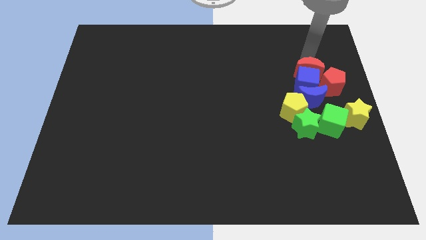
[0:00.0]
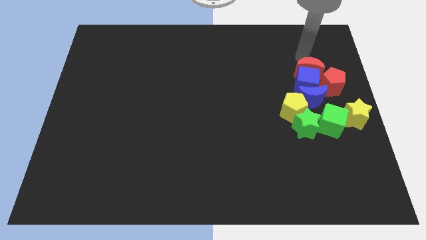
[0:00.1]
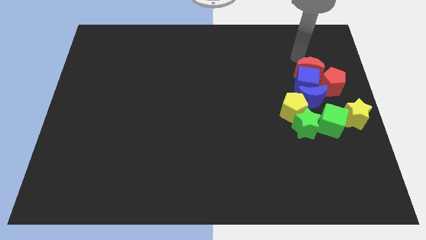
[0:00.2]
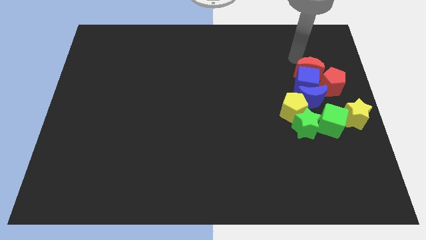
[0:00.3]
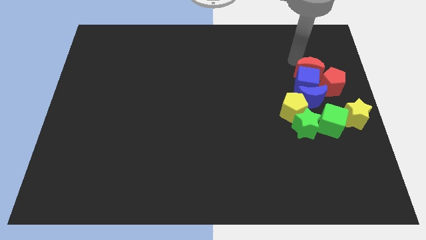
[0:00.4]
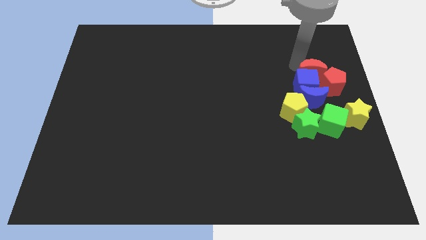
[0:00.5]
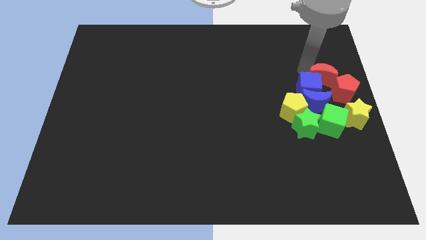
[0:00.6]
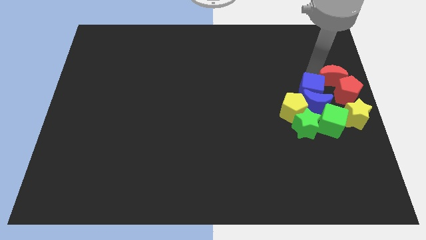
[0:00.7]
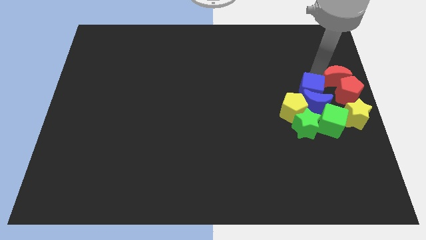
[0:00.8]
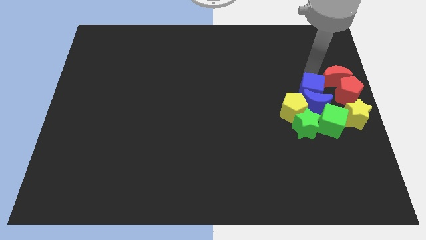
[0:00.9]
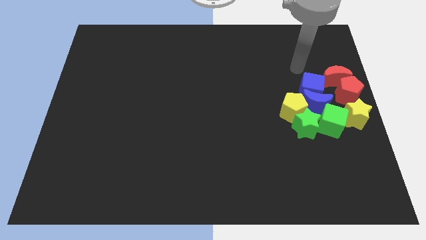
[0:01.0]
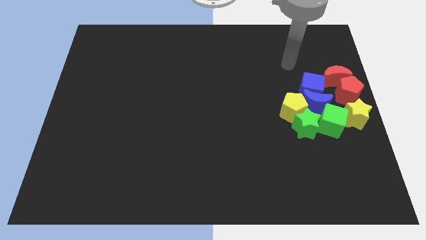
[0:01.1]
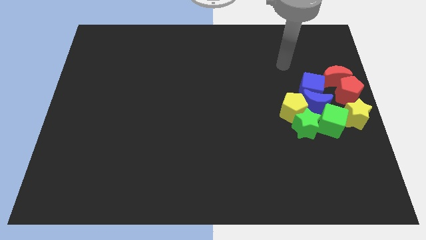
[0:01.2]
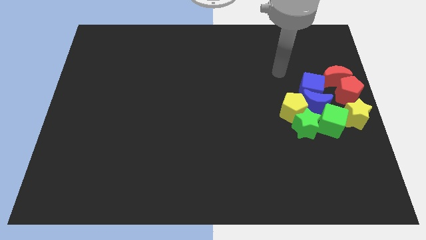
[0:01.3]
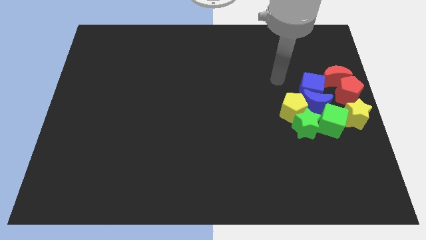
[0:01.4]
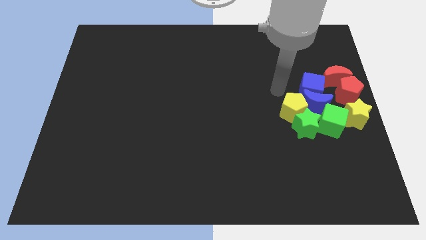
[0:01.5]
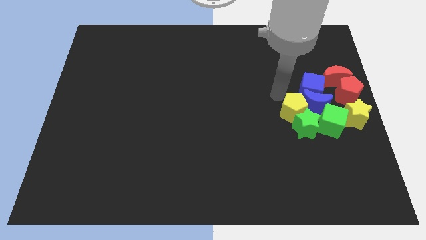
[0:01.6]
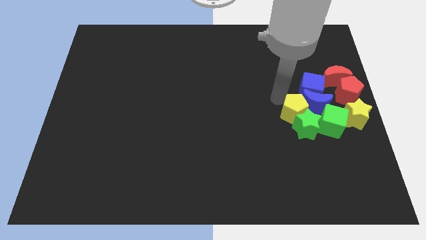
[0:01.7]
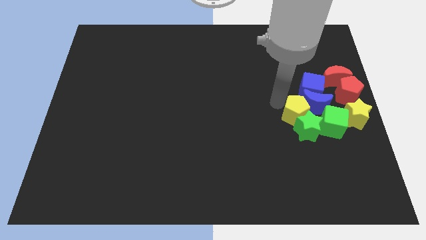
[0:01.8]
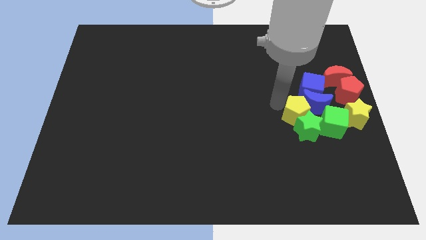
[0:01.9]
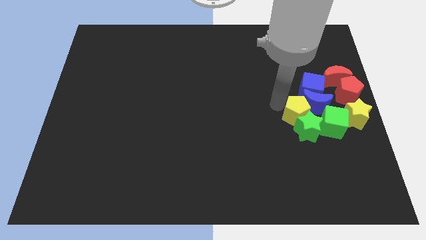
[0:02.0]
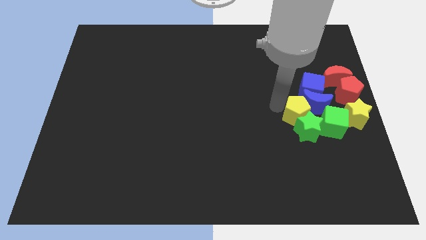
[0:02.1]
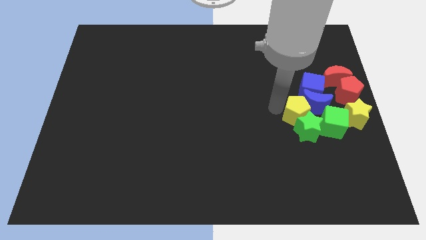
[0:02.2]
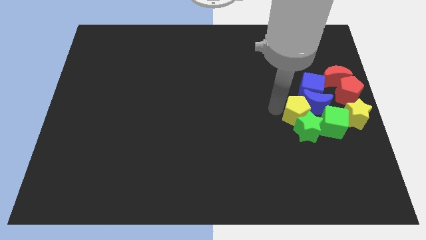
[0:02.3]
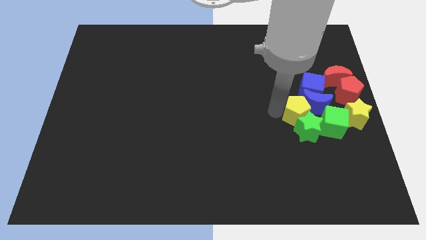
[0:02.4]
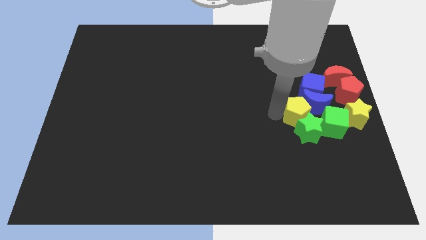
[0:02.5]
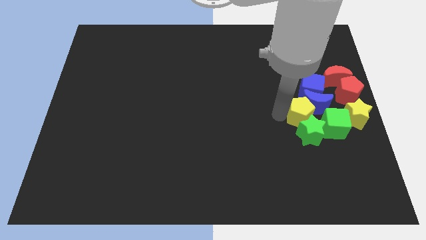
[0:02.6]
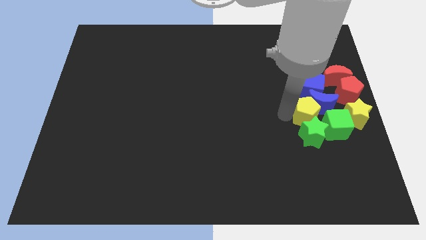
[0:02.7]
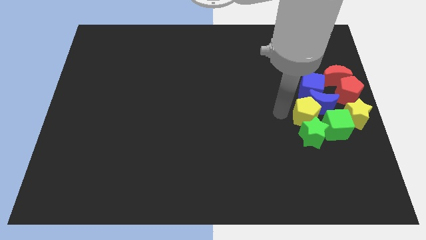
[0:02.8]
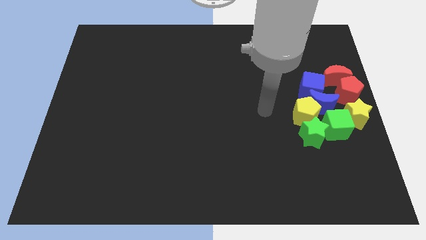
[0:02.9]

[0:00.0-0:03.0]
adjust the group of blocks at the right center of the board

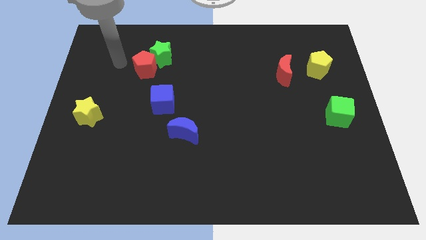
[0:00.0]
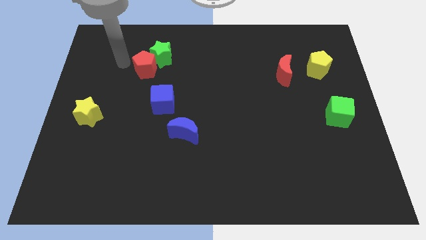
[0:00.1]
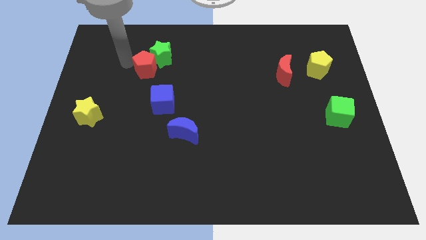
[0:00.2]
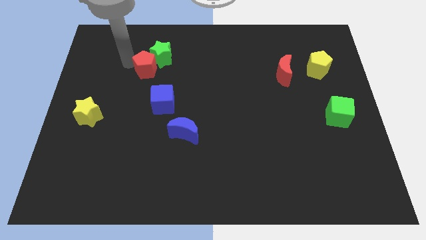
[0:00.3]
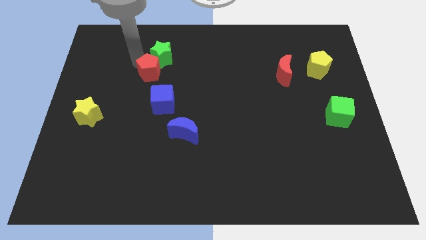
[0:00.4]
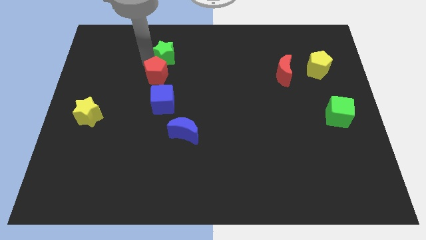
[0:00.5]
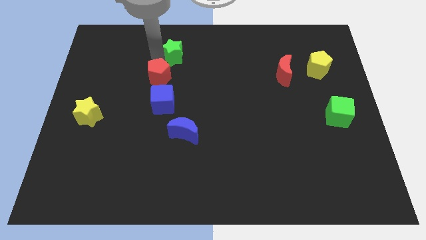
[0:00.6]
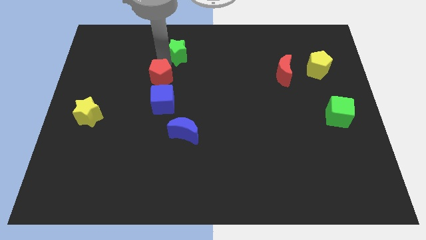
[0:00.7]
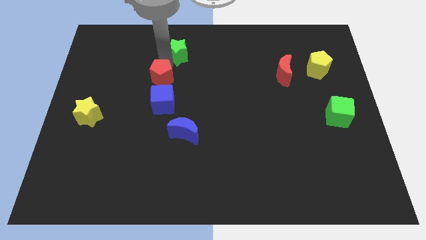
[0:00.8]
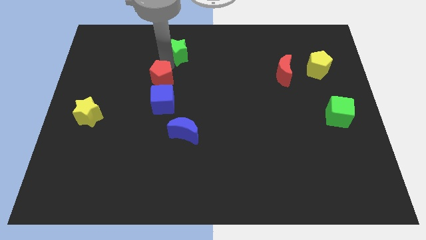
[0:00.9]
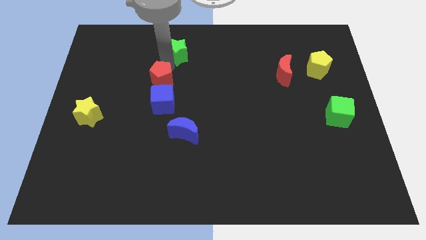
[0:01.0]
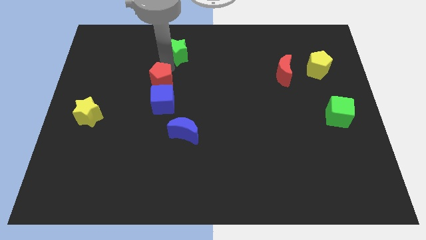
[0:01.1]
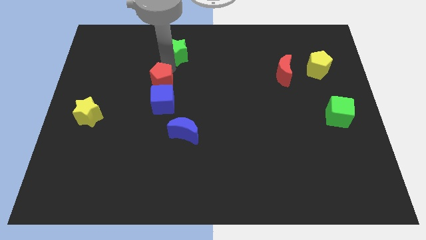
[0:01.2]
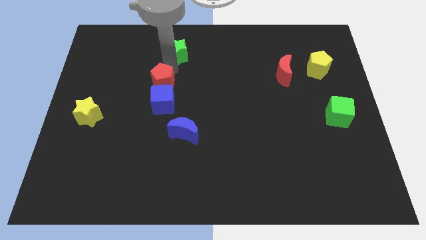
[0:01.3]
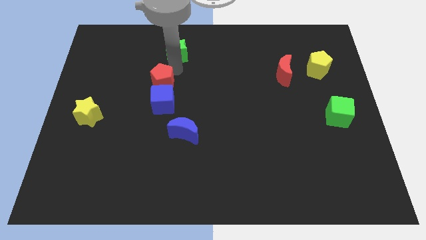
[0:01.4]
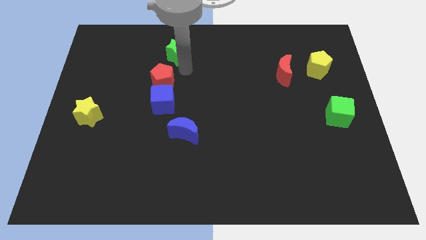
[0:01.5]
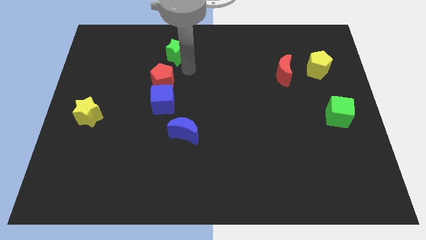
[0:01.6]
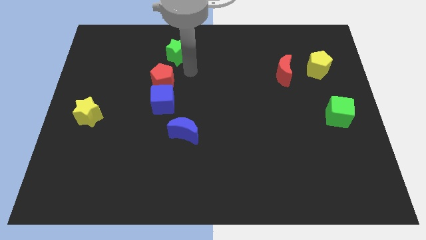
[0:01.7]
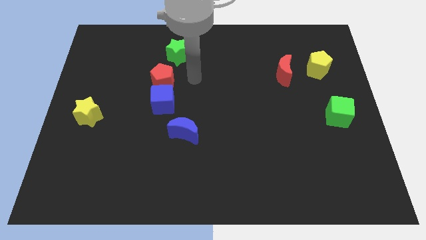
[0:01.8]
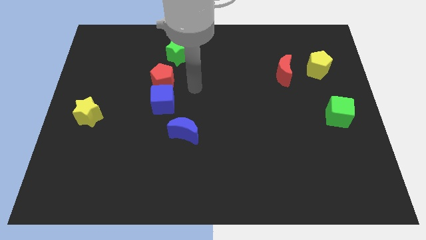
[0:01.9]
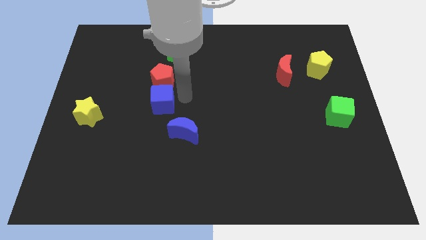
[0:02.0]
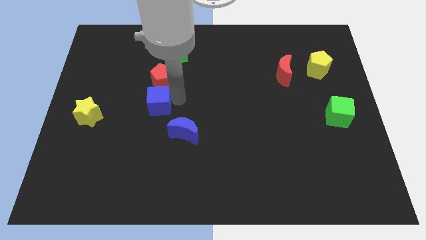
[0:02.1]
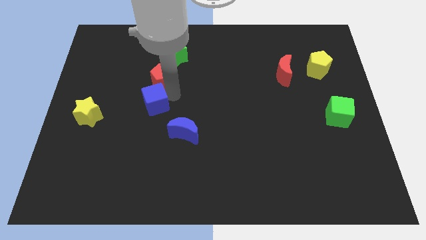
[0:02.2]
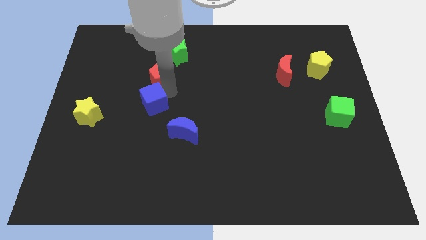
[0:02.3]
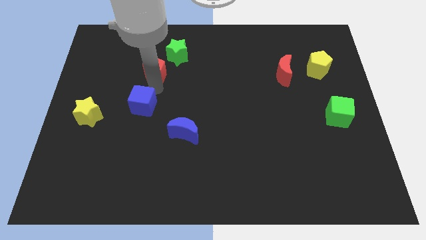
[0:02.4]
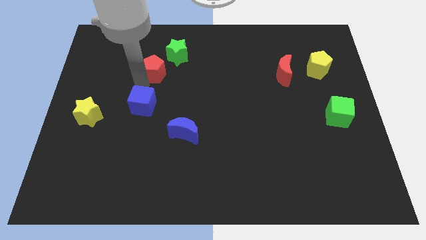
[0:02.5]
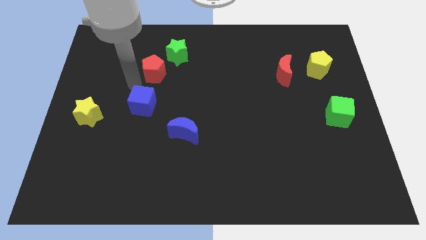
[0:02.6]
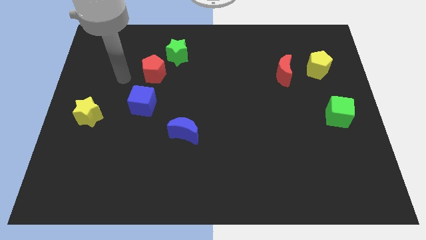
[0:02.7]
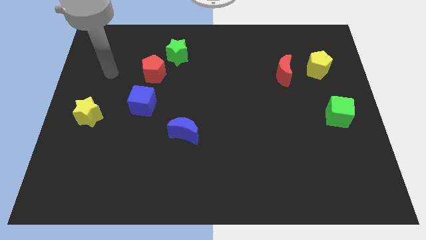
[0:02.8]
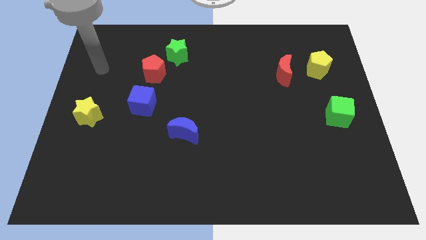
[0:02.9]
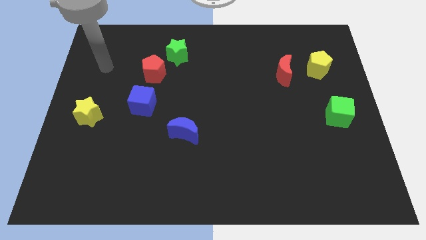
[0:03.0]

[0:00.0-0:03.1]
push the red pentagon to the top of the blue cube

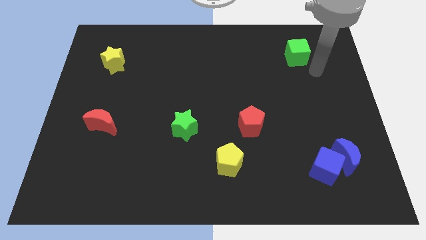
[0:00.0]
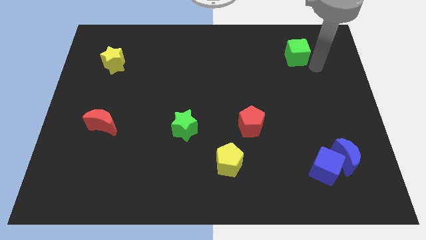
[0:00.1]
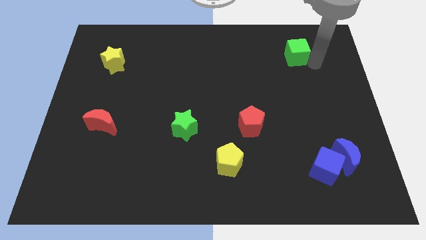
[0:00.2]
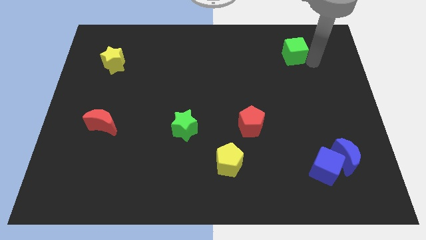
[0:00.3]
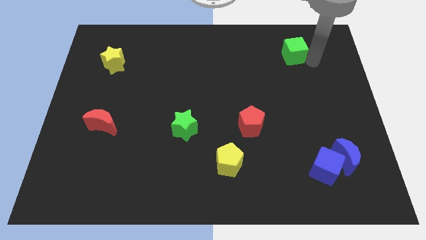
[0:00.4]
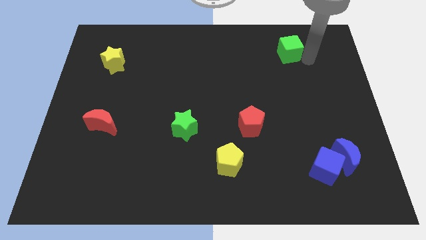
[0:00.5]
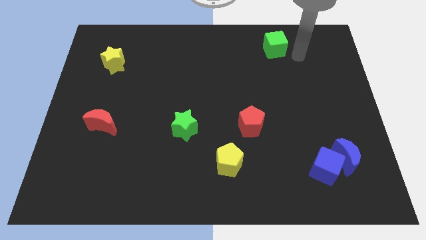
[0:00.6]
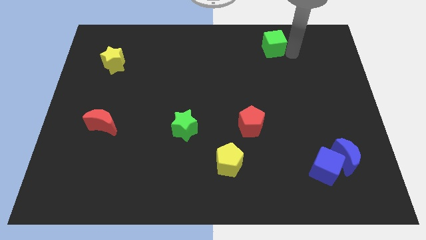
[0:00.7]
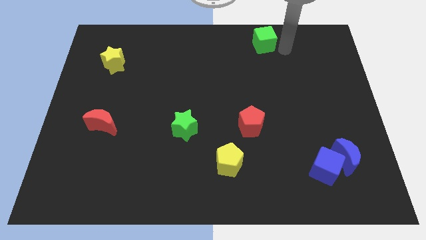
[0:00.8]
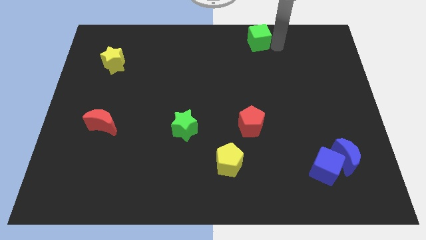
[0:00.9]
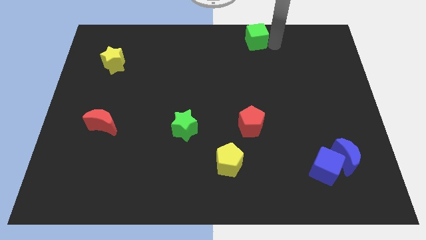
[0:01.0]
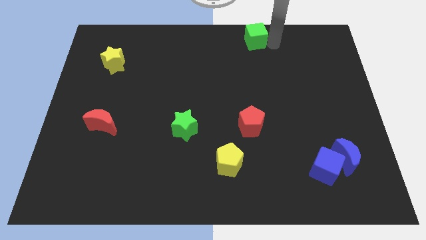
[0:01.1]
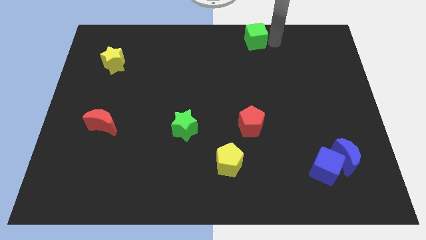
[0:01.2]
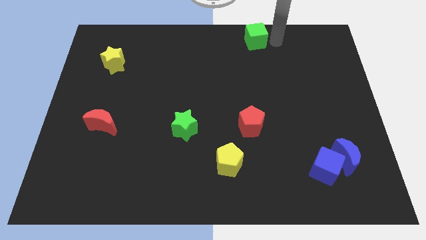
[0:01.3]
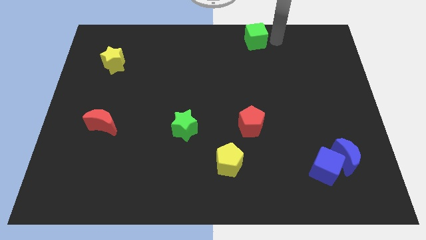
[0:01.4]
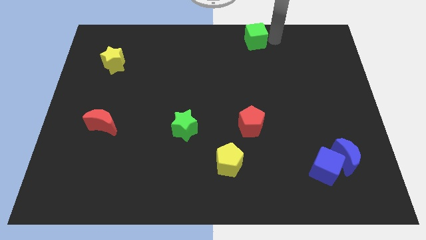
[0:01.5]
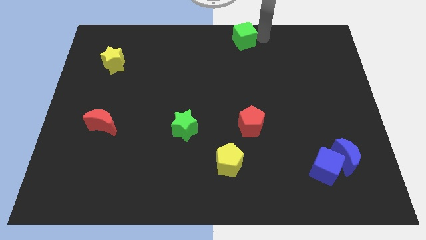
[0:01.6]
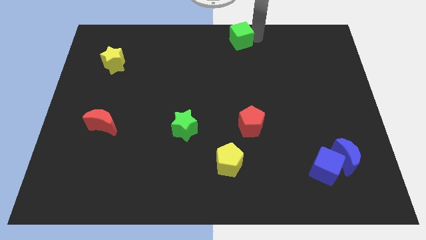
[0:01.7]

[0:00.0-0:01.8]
push green cube above red pentagon

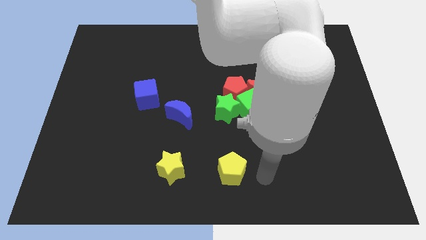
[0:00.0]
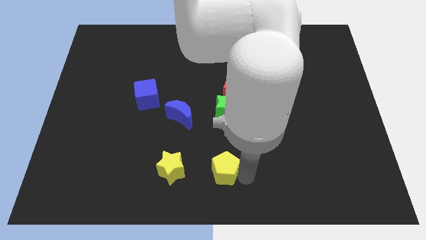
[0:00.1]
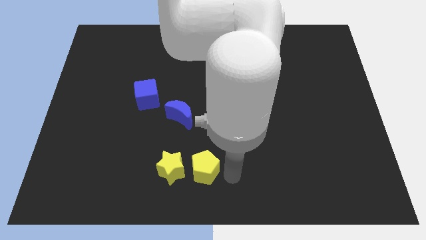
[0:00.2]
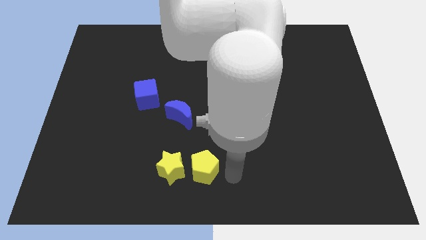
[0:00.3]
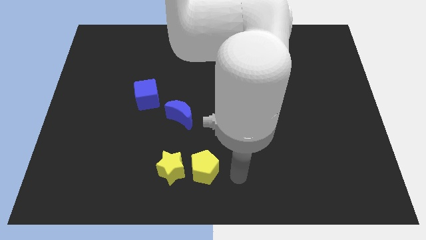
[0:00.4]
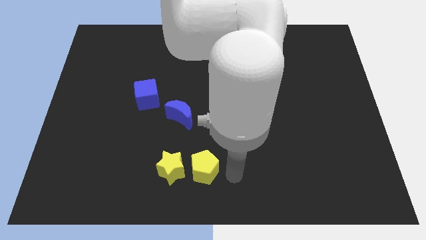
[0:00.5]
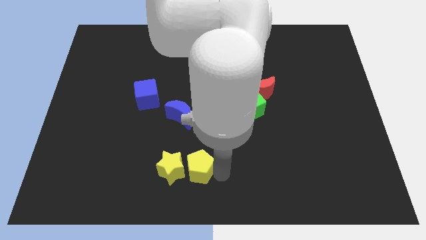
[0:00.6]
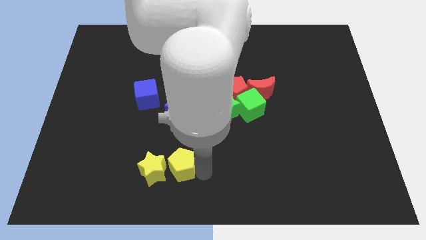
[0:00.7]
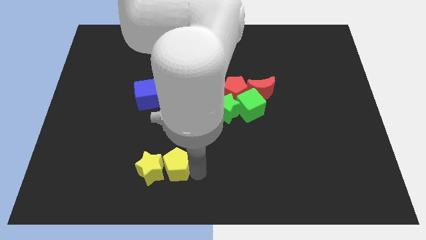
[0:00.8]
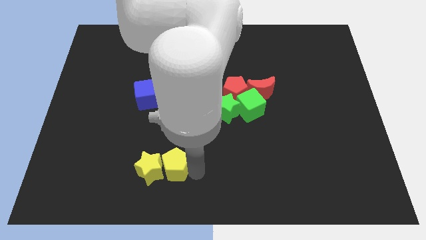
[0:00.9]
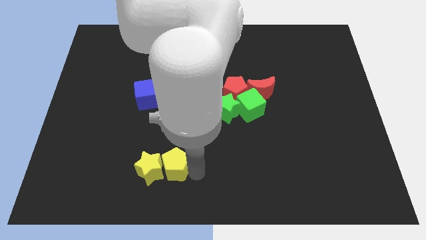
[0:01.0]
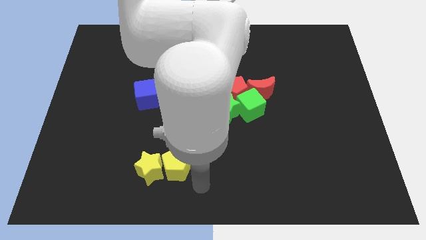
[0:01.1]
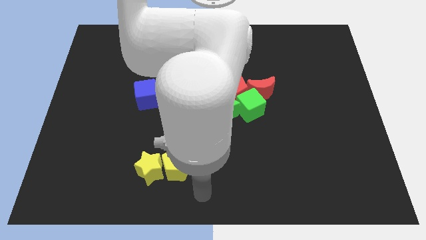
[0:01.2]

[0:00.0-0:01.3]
place yellow pentagon below blue crescent
